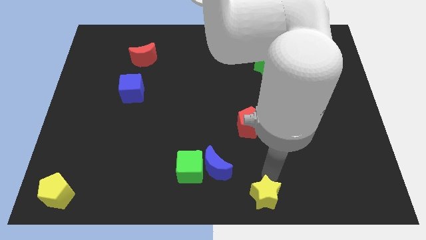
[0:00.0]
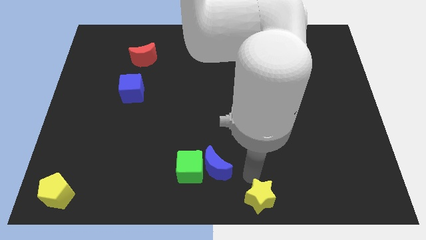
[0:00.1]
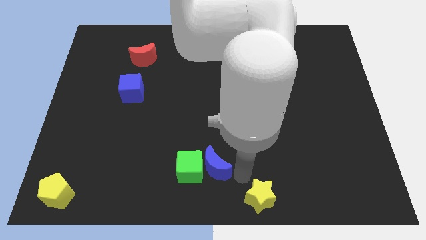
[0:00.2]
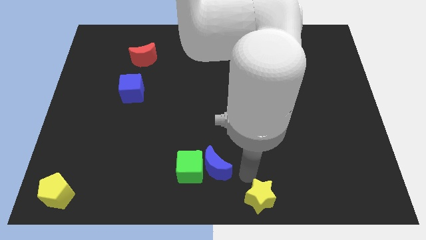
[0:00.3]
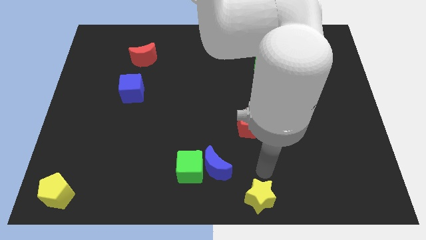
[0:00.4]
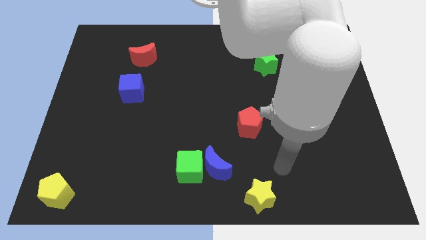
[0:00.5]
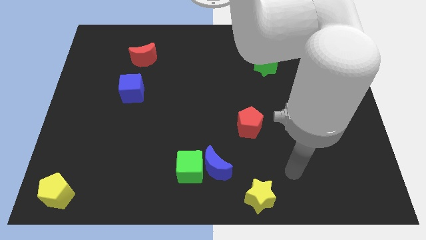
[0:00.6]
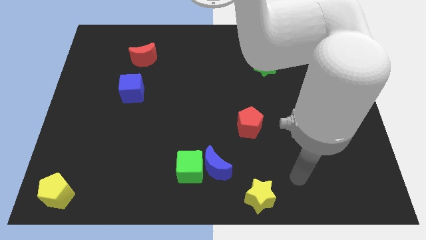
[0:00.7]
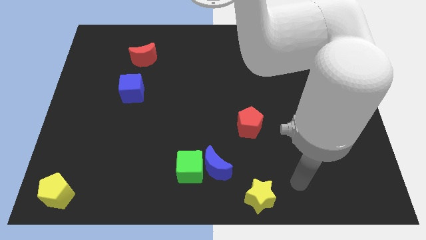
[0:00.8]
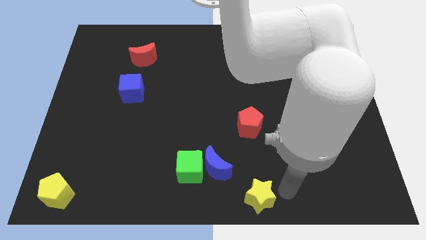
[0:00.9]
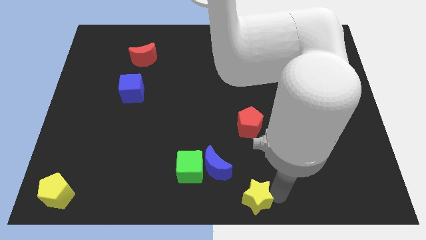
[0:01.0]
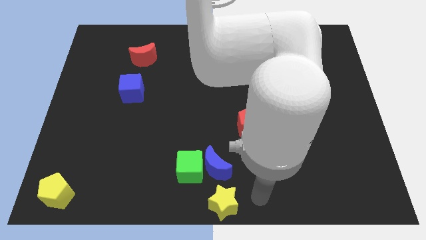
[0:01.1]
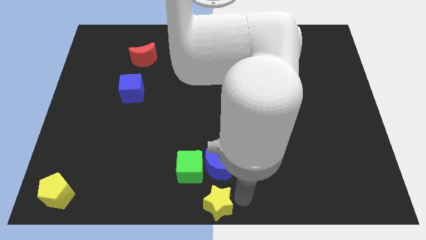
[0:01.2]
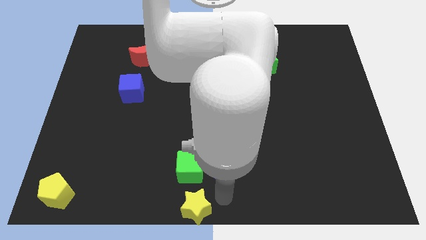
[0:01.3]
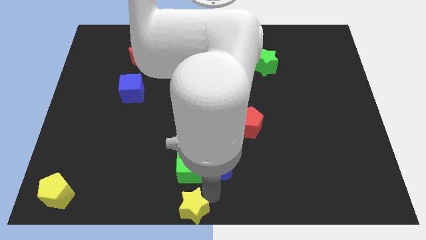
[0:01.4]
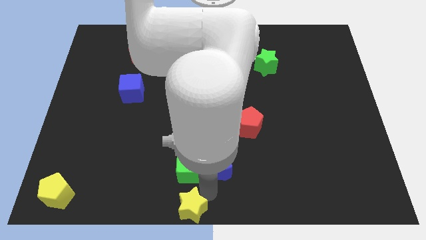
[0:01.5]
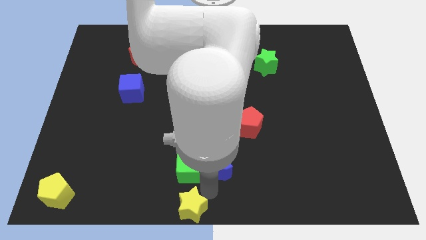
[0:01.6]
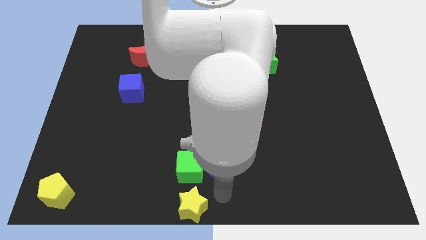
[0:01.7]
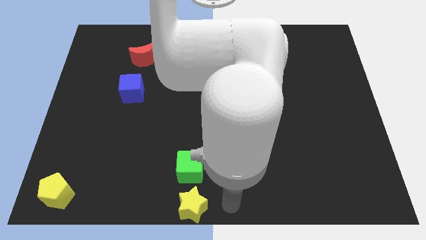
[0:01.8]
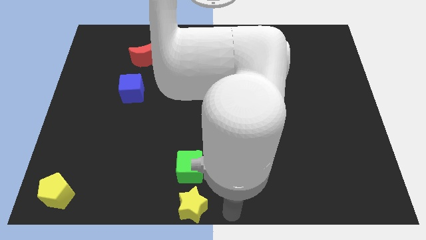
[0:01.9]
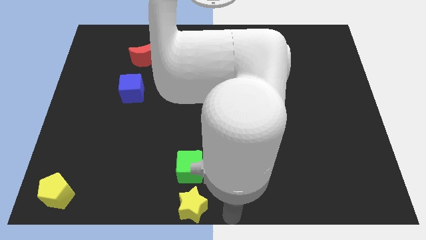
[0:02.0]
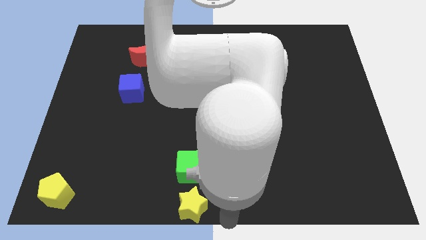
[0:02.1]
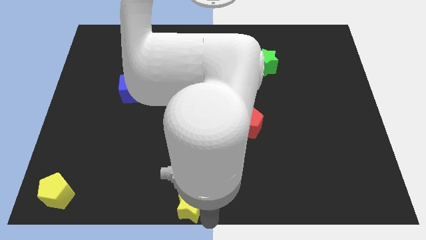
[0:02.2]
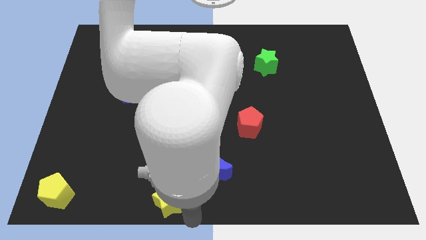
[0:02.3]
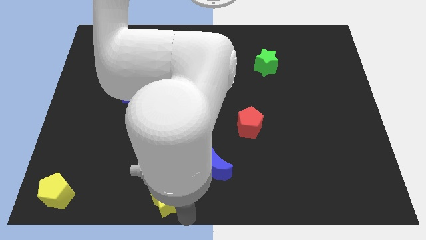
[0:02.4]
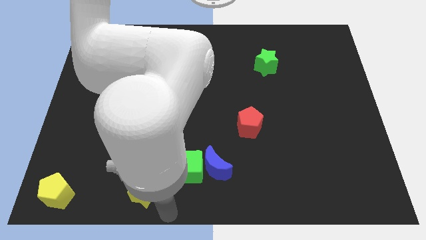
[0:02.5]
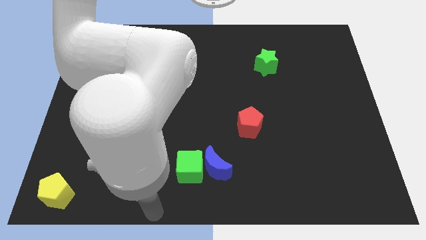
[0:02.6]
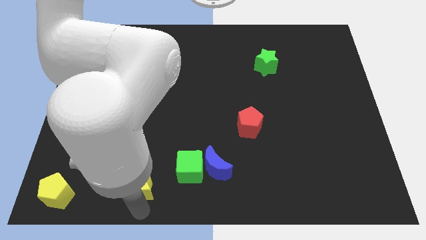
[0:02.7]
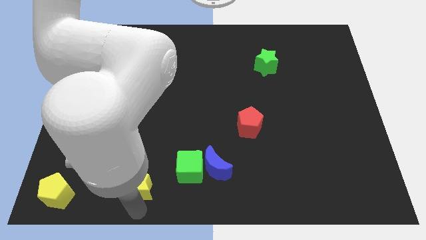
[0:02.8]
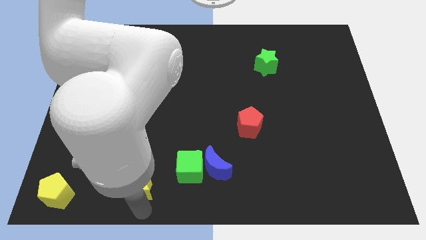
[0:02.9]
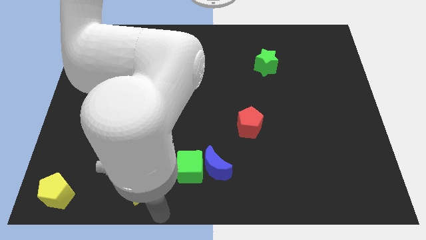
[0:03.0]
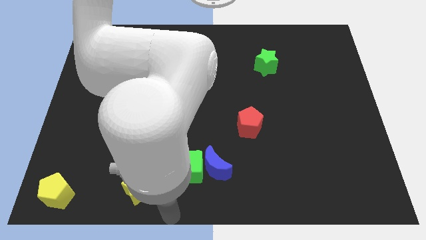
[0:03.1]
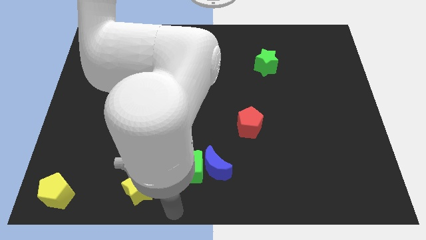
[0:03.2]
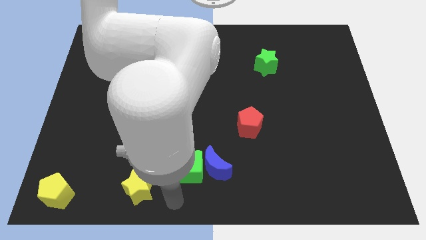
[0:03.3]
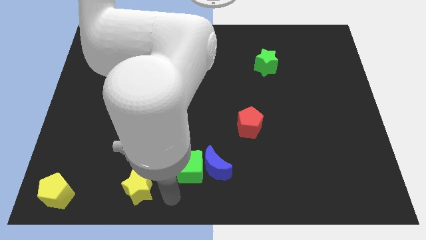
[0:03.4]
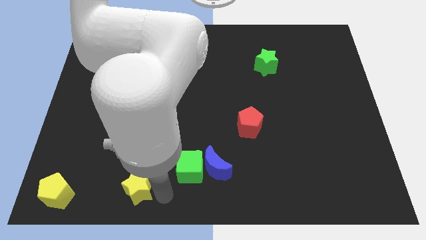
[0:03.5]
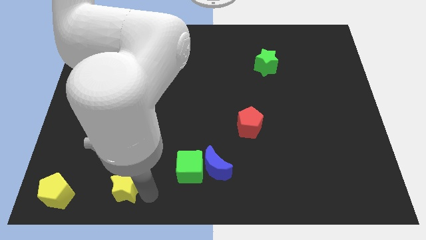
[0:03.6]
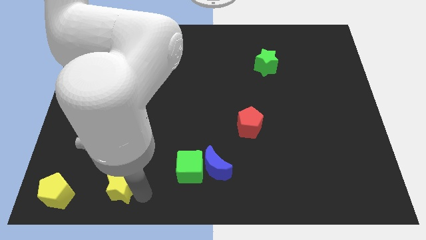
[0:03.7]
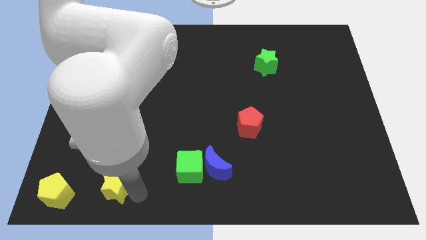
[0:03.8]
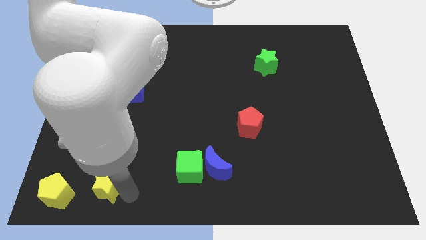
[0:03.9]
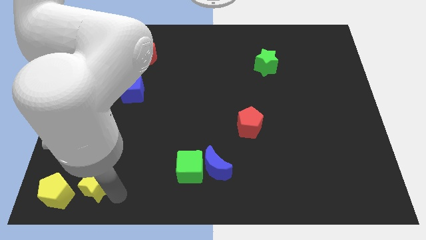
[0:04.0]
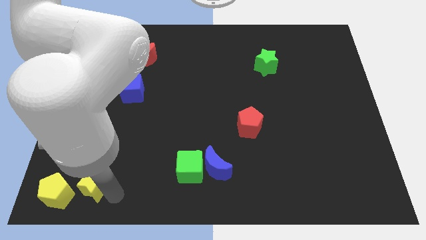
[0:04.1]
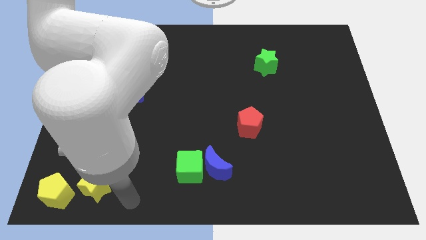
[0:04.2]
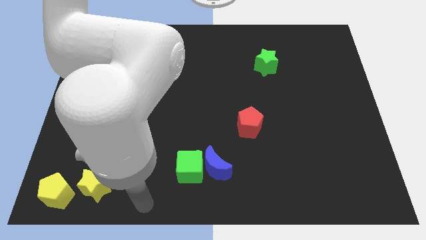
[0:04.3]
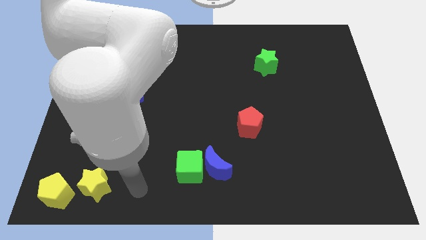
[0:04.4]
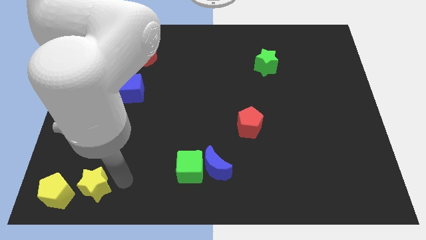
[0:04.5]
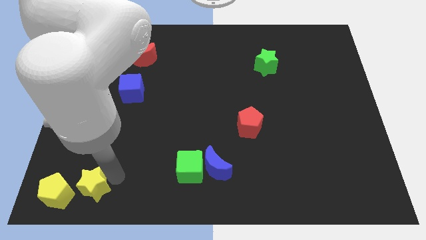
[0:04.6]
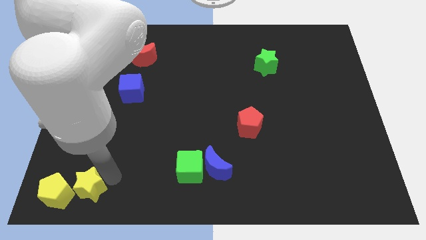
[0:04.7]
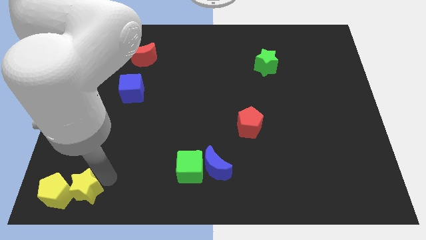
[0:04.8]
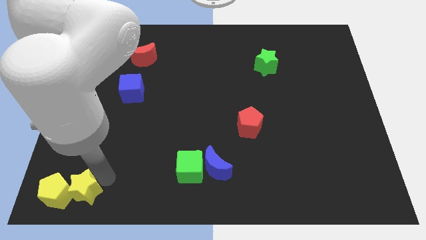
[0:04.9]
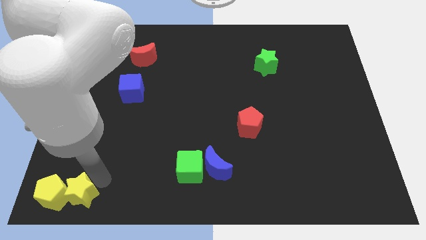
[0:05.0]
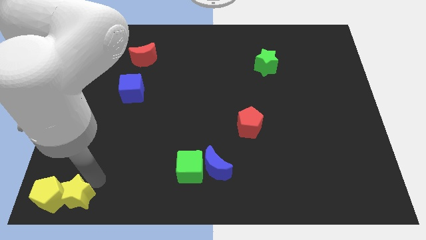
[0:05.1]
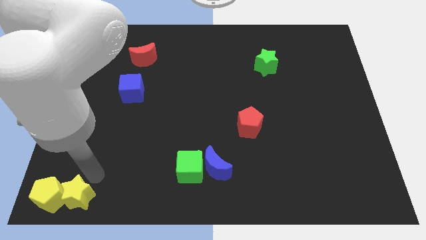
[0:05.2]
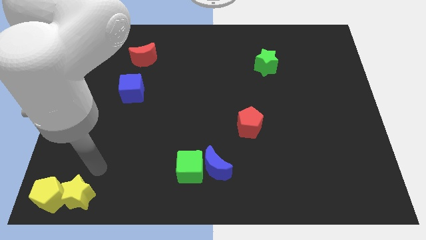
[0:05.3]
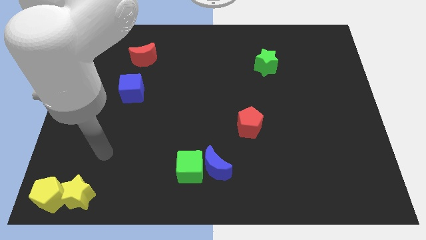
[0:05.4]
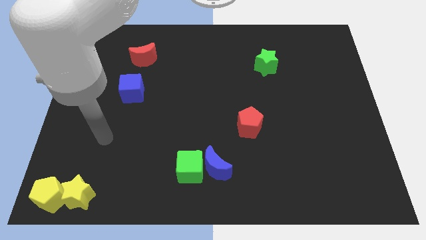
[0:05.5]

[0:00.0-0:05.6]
push the yellow star into the yellow pentagon

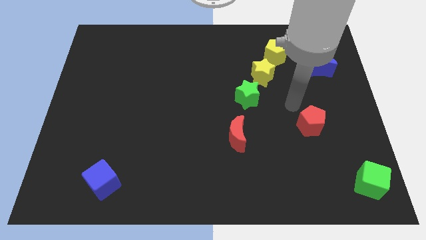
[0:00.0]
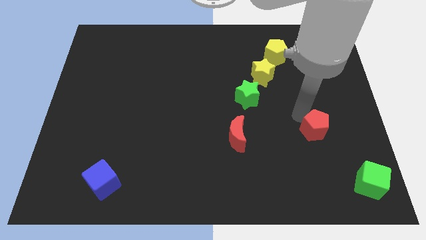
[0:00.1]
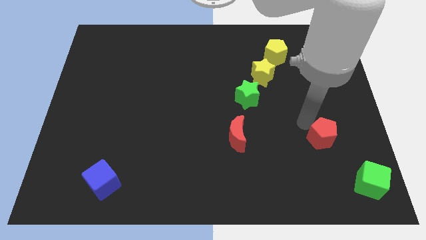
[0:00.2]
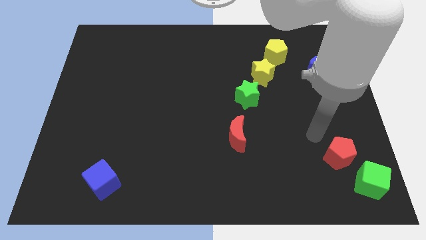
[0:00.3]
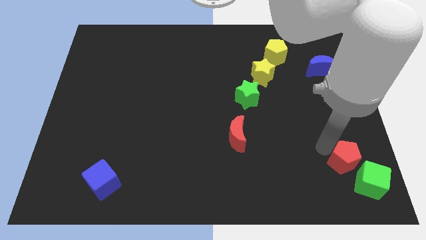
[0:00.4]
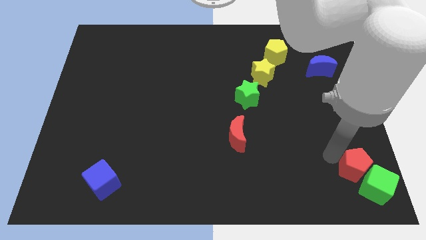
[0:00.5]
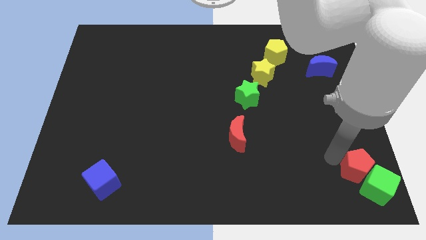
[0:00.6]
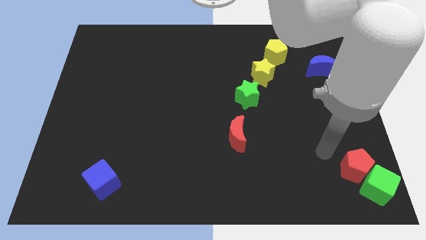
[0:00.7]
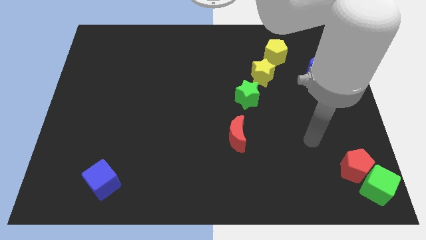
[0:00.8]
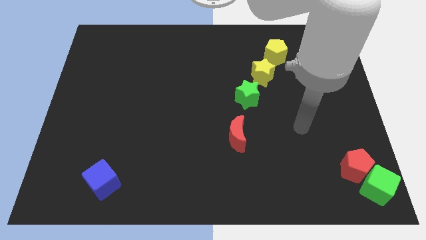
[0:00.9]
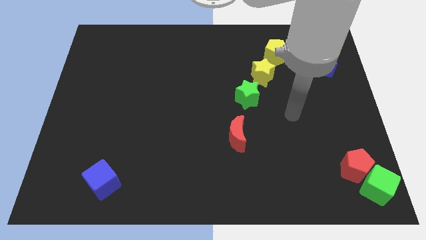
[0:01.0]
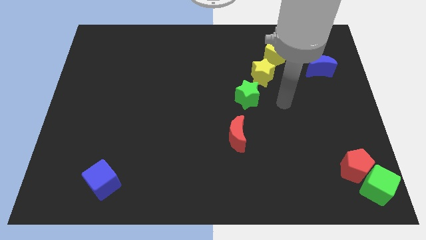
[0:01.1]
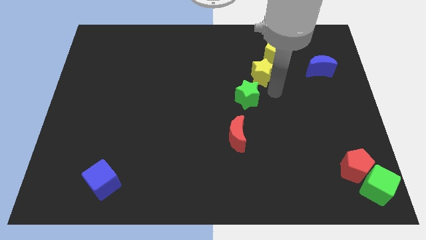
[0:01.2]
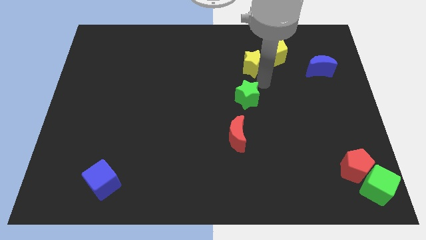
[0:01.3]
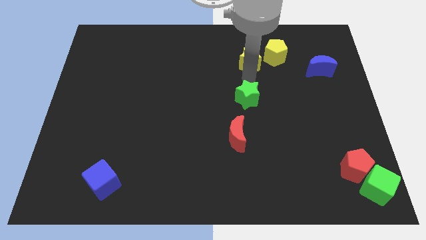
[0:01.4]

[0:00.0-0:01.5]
push the red pentagon into the green cube

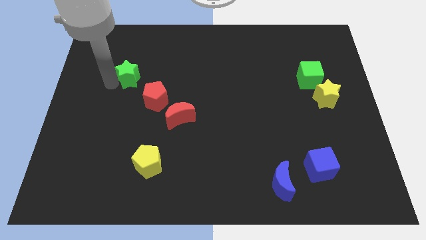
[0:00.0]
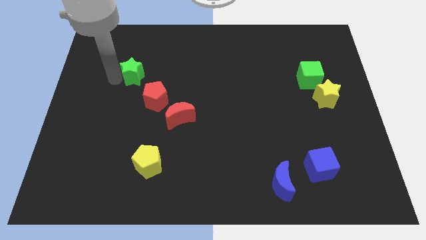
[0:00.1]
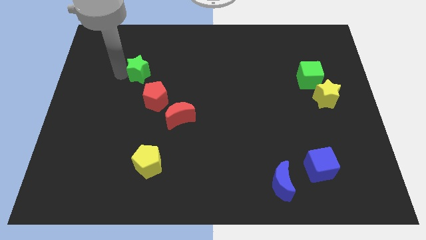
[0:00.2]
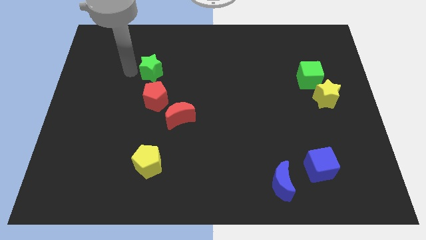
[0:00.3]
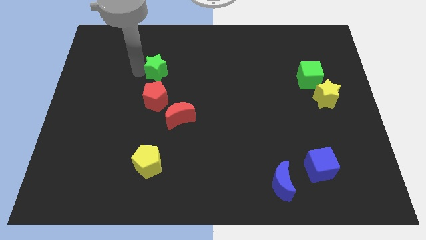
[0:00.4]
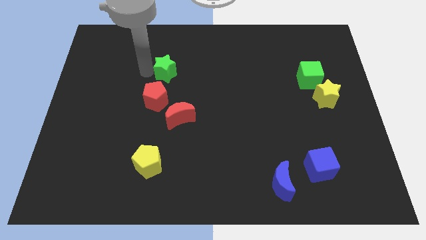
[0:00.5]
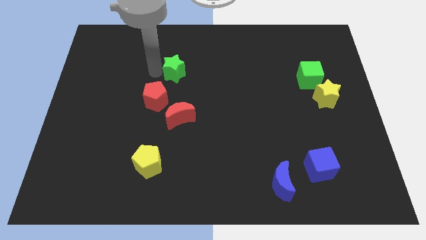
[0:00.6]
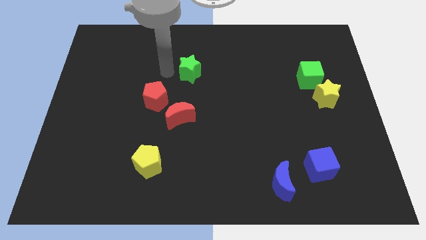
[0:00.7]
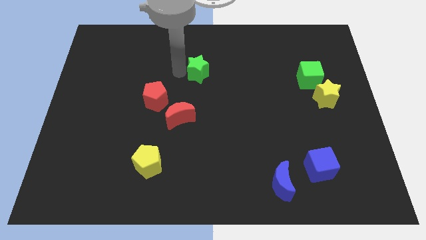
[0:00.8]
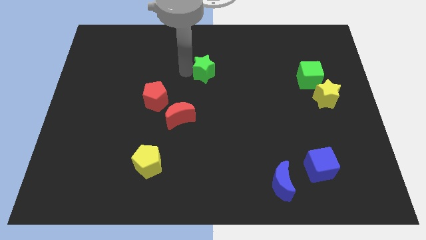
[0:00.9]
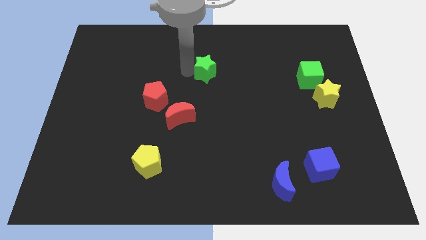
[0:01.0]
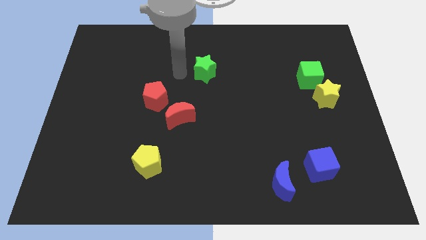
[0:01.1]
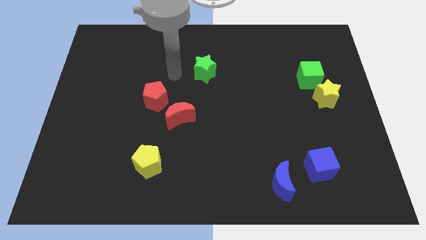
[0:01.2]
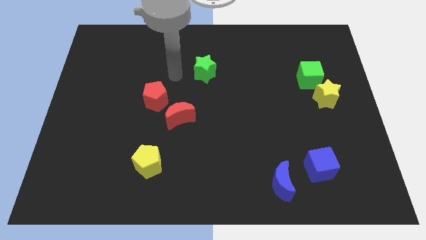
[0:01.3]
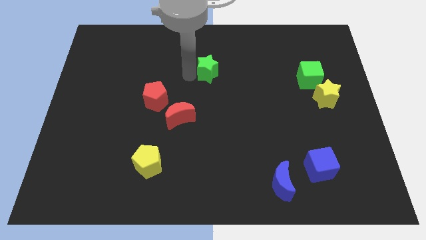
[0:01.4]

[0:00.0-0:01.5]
move the green star to the right of the board

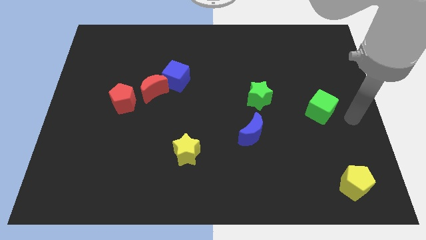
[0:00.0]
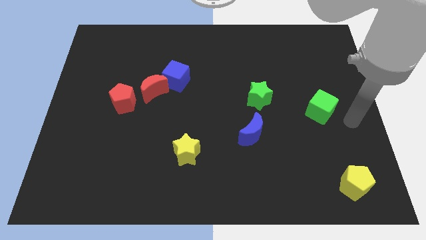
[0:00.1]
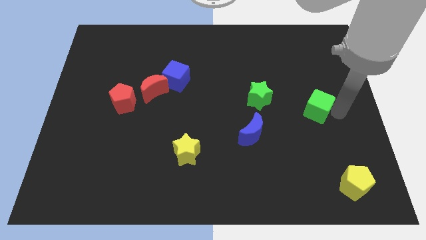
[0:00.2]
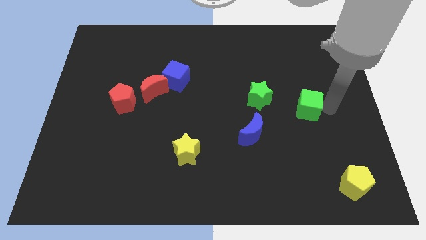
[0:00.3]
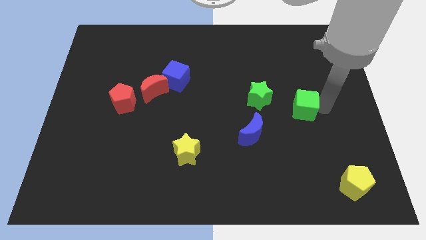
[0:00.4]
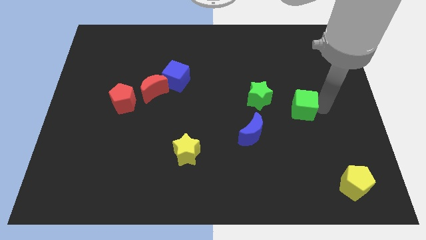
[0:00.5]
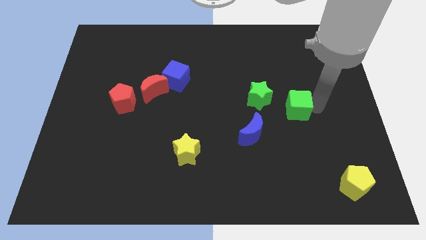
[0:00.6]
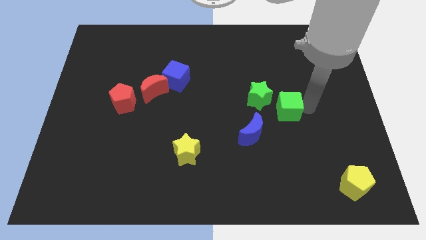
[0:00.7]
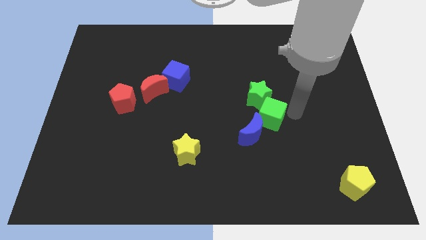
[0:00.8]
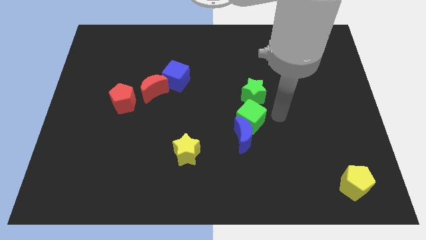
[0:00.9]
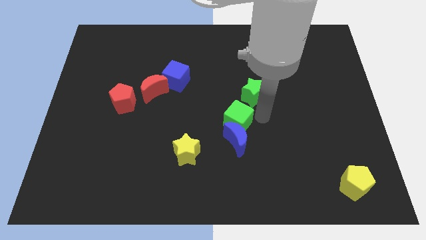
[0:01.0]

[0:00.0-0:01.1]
place green cube to the bottom of the green star
